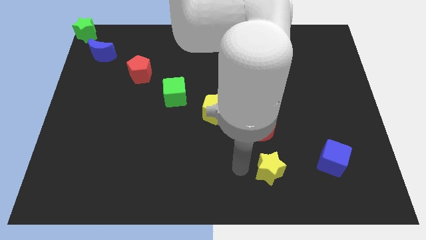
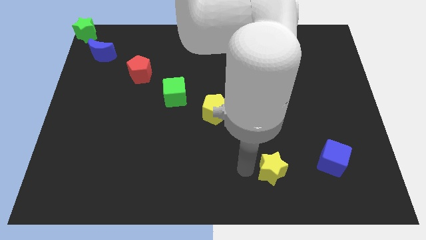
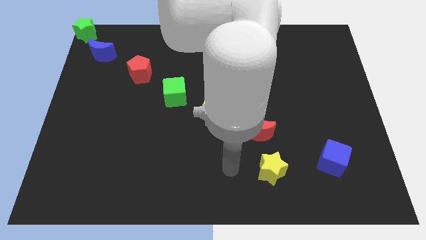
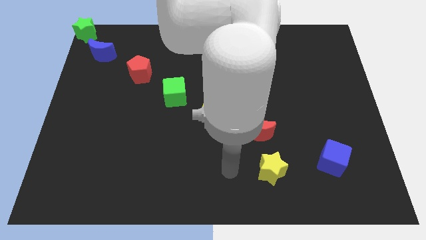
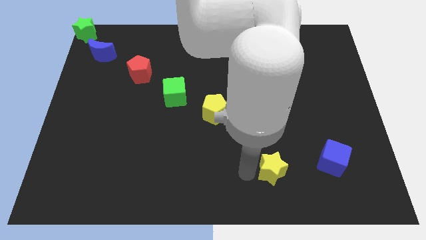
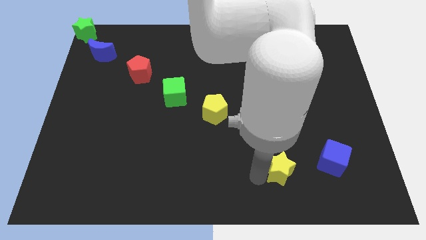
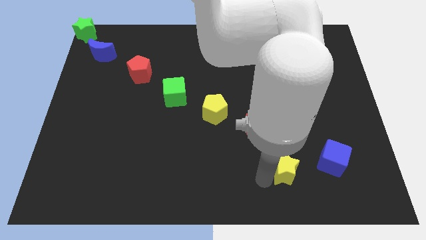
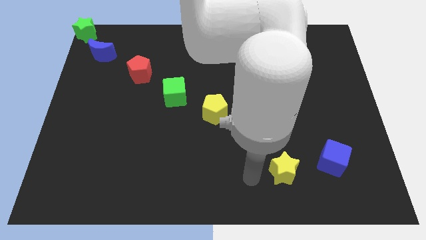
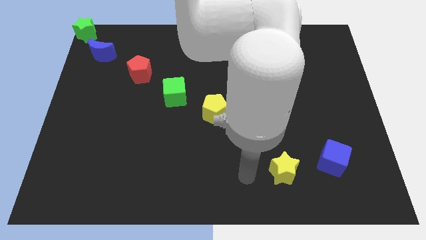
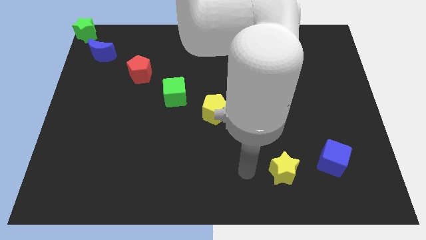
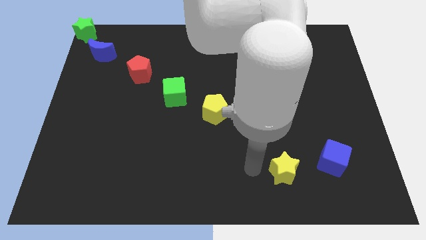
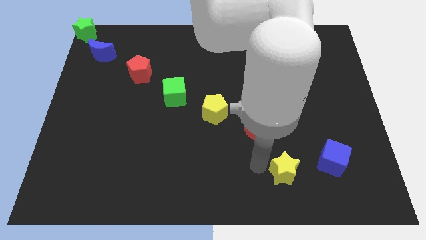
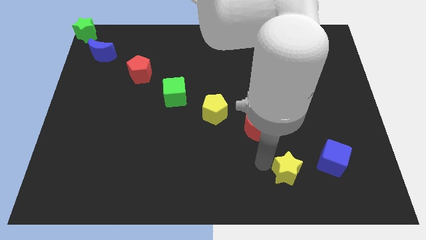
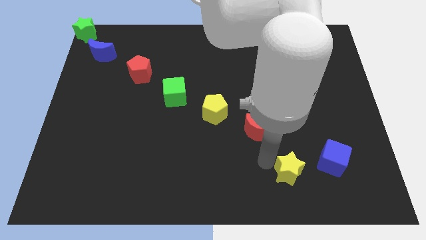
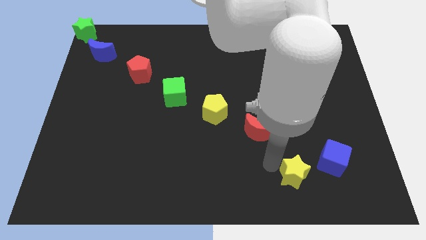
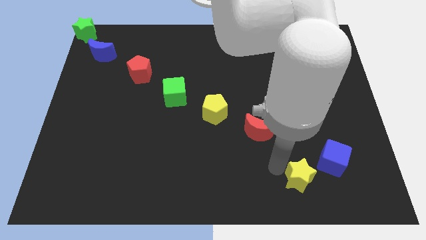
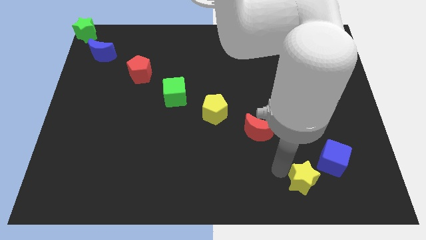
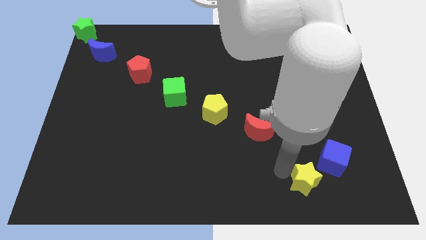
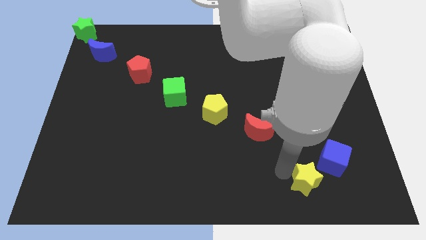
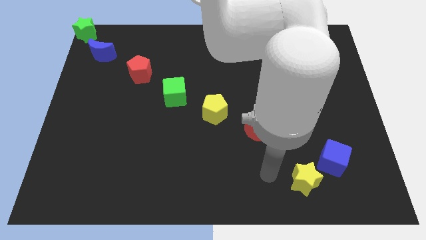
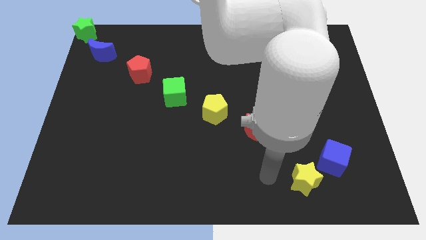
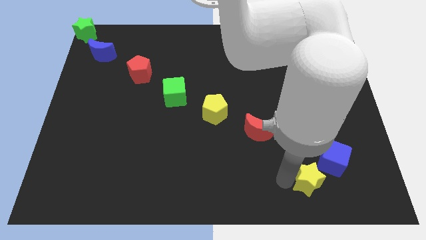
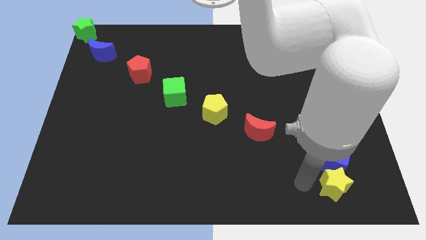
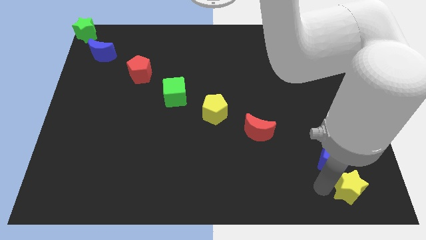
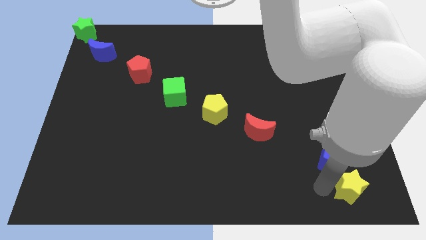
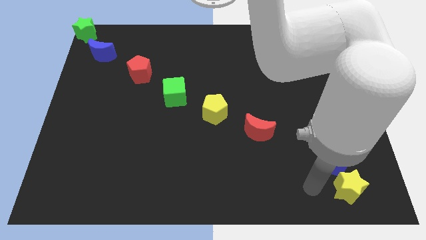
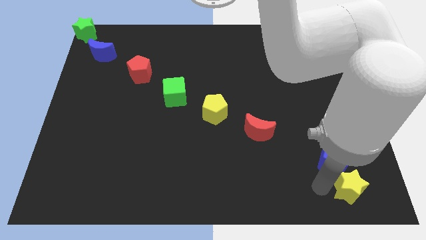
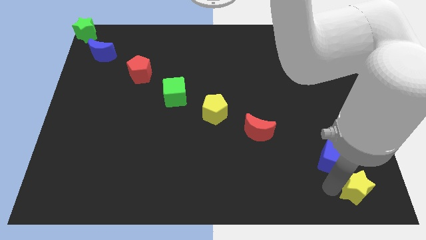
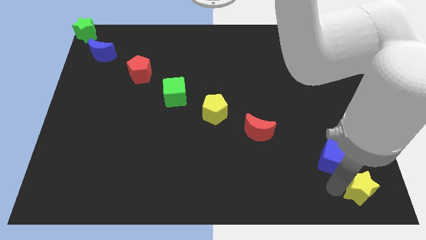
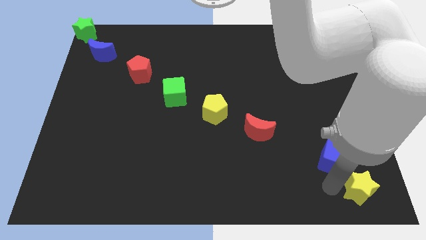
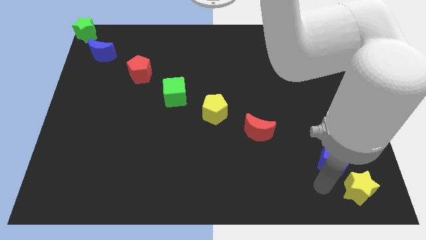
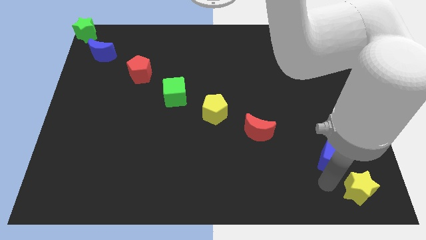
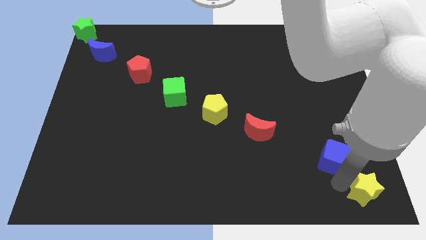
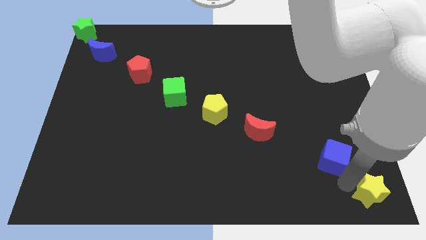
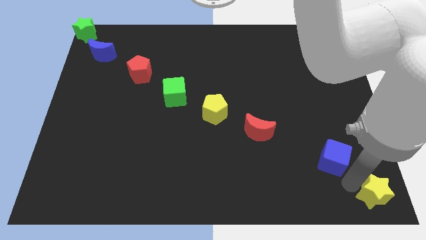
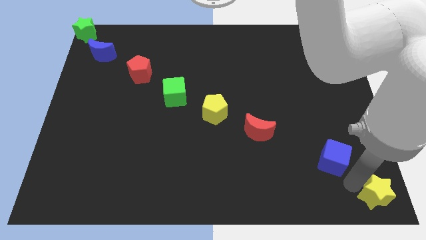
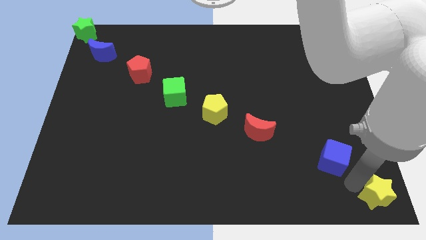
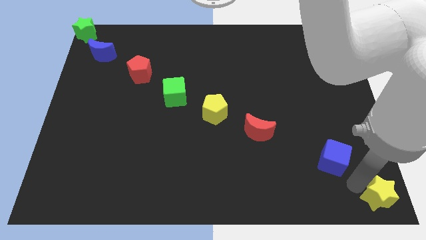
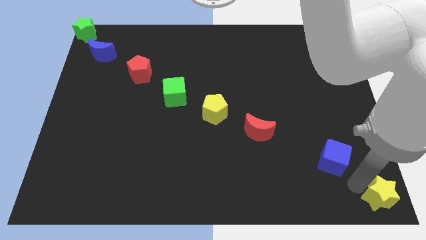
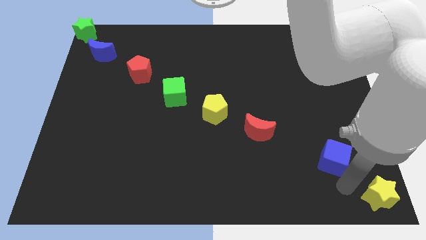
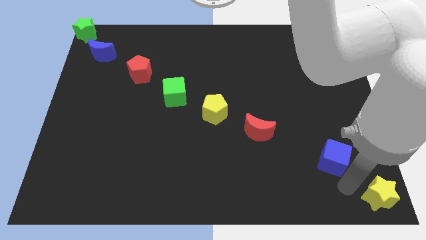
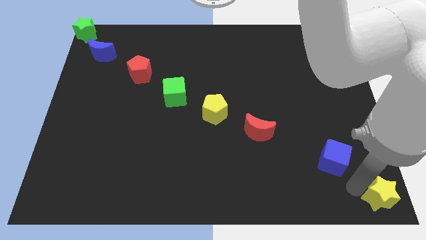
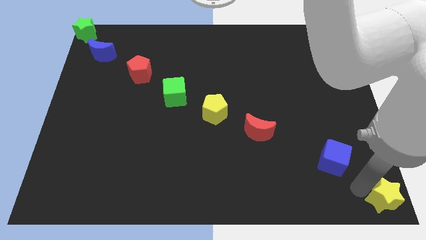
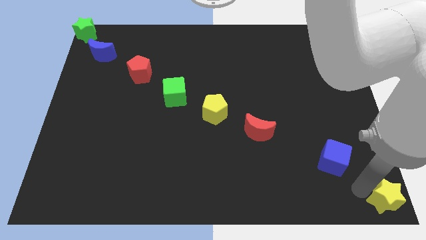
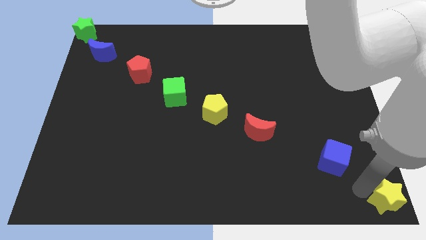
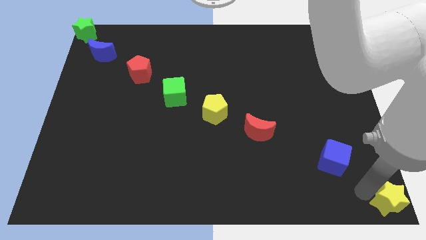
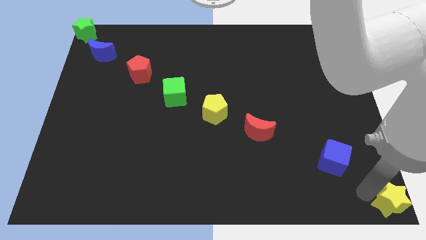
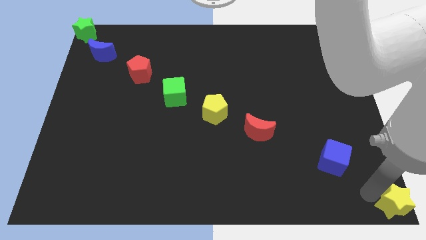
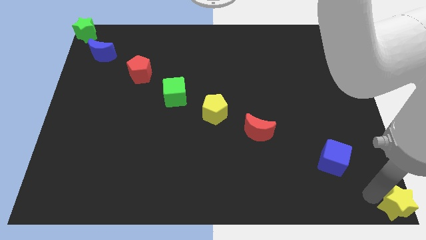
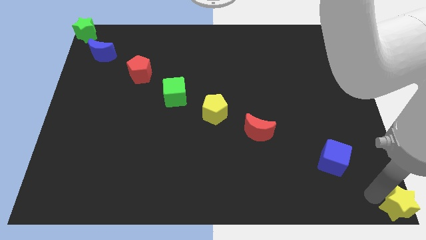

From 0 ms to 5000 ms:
move the yellow star to the bottom right corner of the board

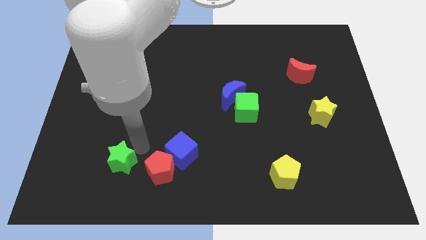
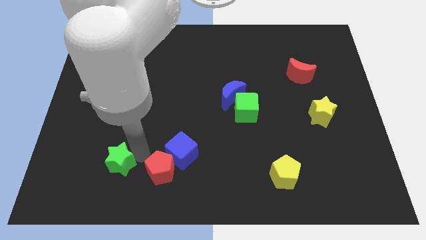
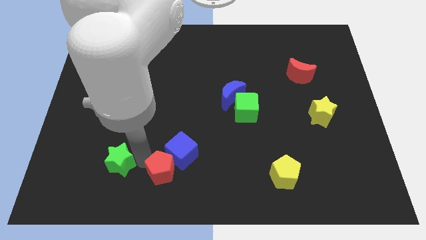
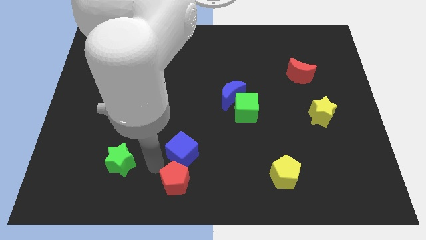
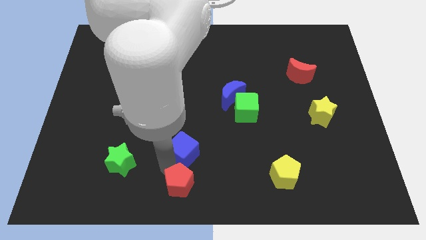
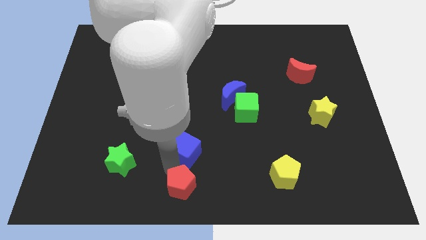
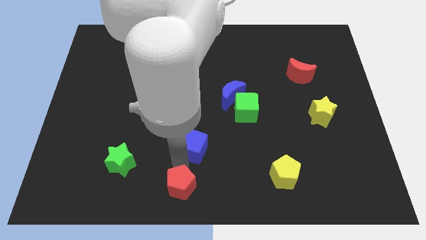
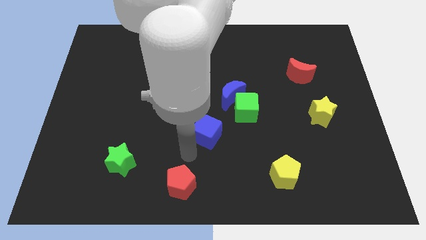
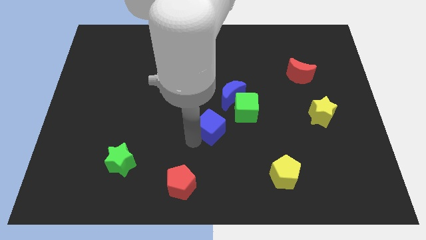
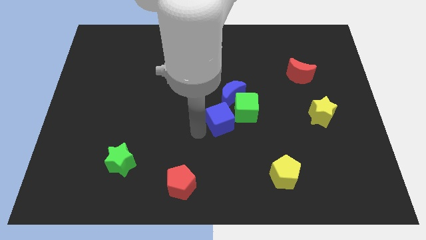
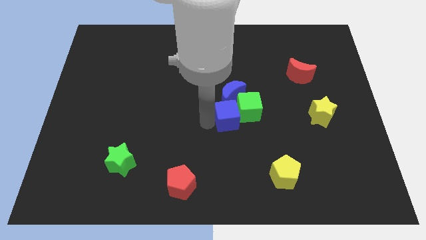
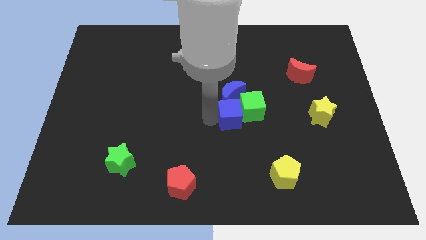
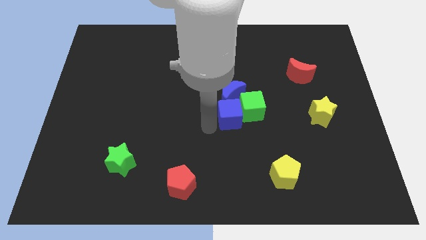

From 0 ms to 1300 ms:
separate the blue cube and red pentagon

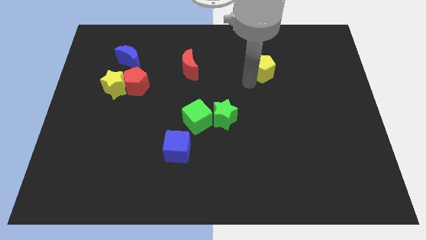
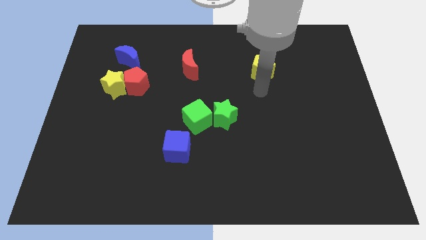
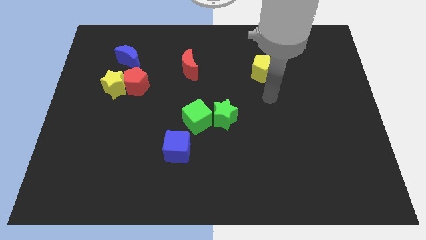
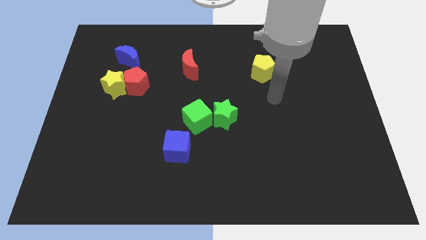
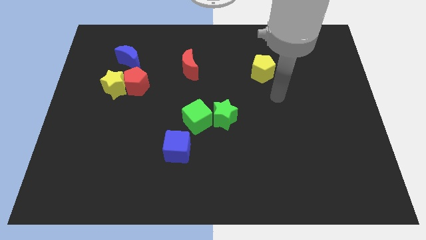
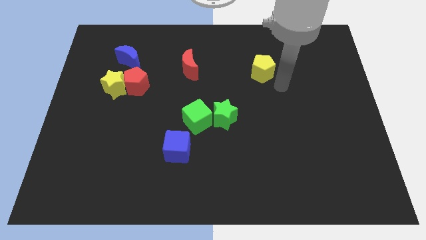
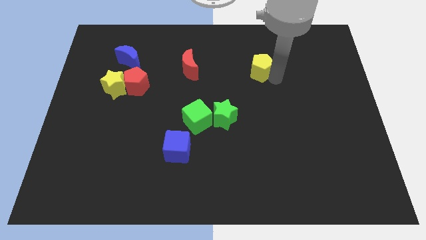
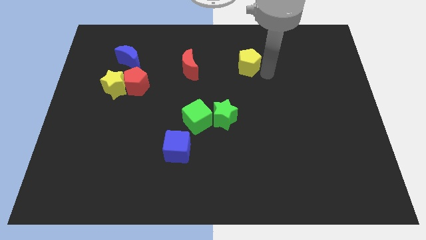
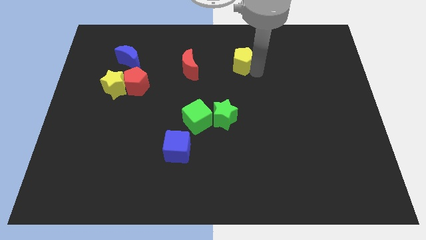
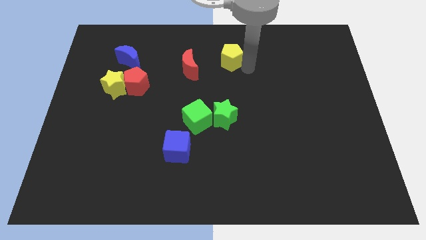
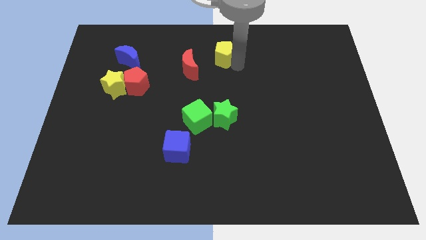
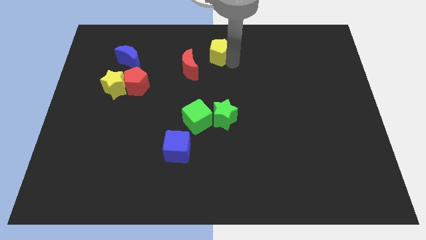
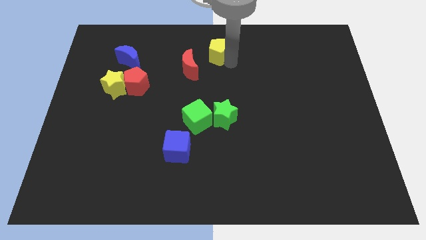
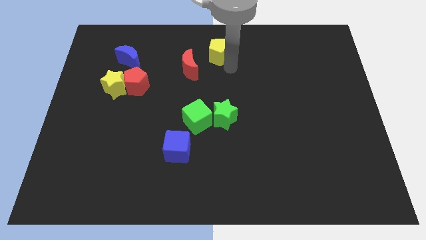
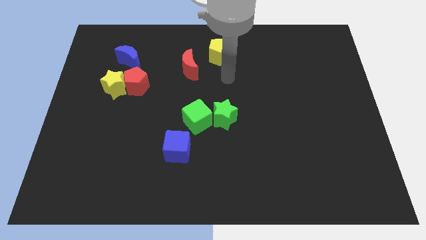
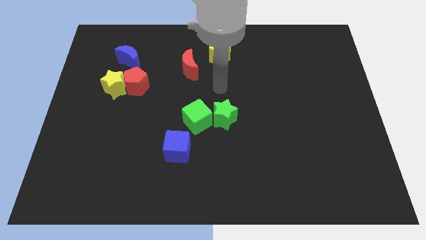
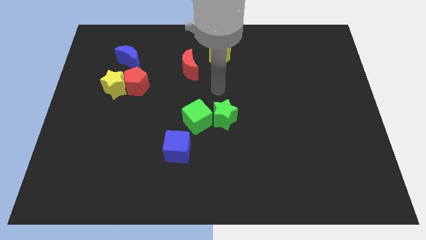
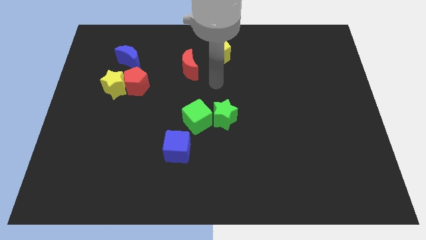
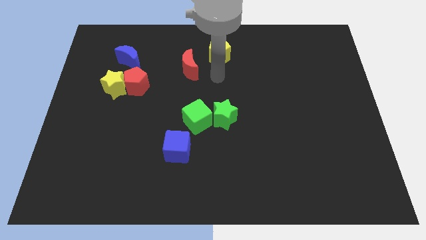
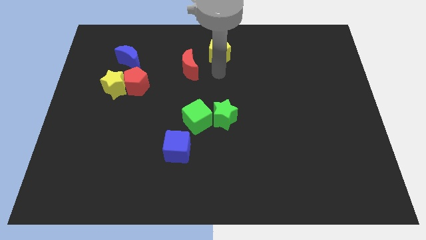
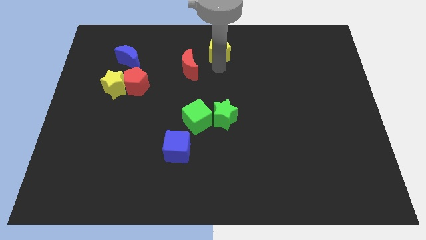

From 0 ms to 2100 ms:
place yellow pentagon to top right of red moon

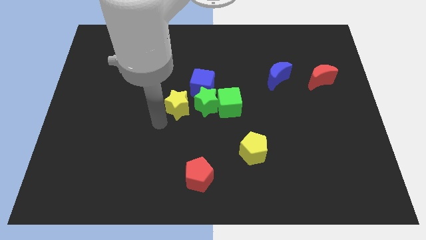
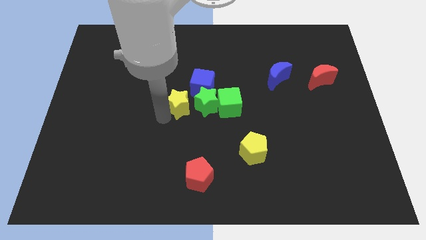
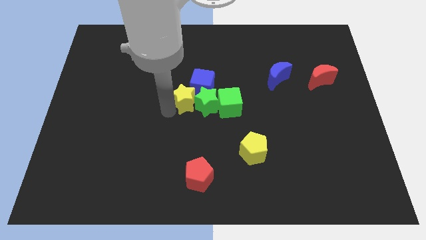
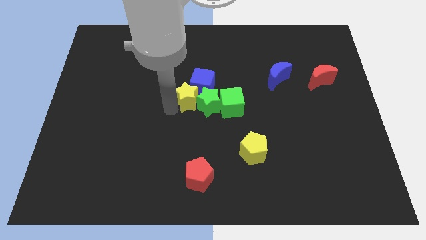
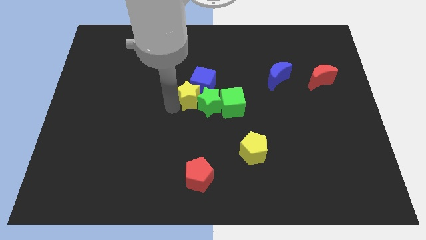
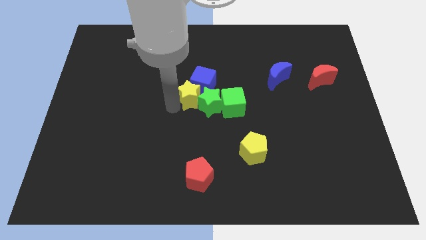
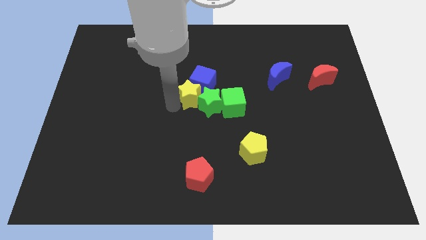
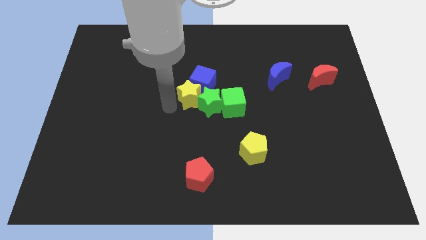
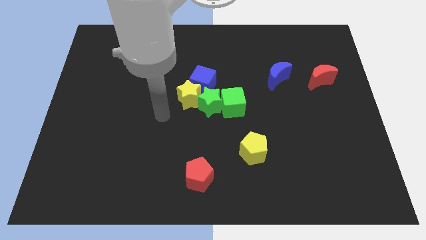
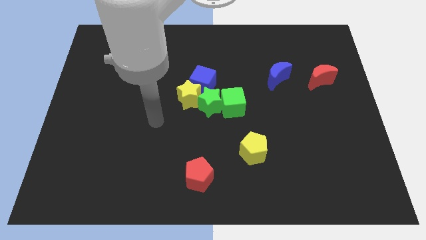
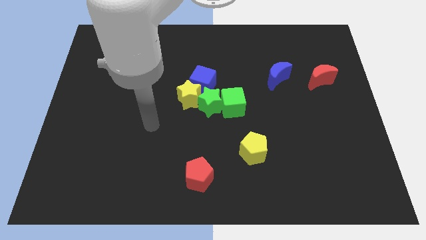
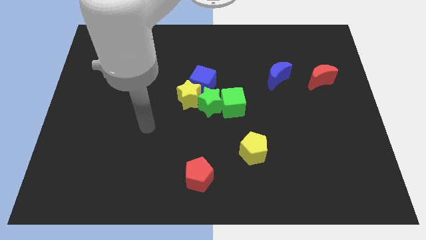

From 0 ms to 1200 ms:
push yellow star close to green star
